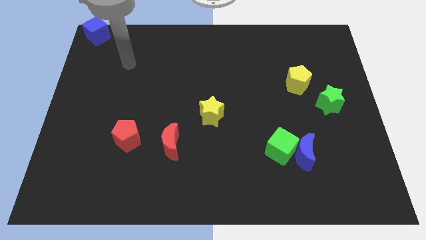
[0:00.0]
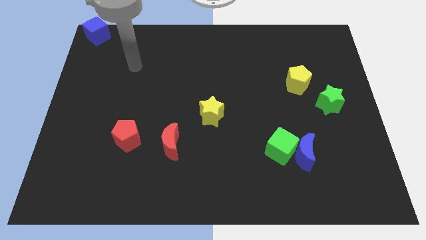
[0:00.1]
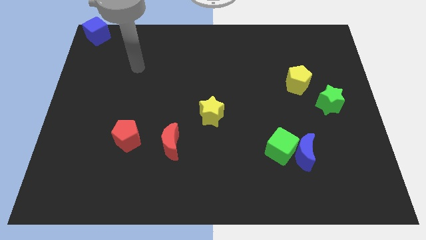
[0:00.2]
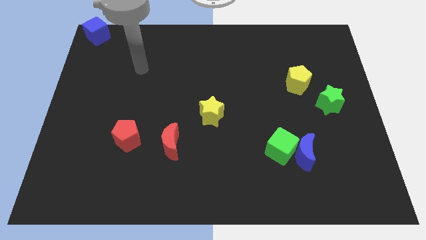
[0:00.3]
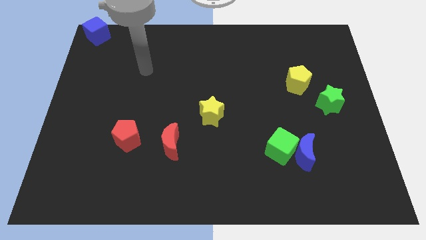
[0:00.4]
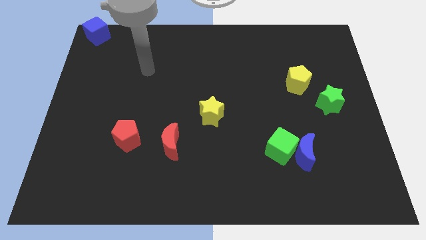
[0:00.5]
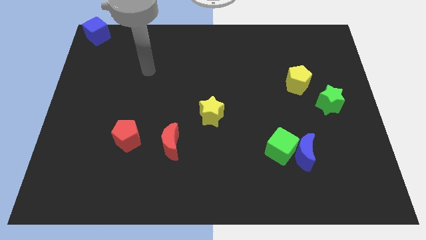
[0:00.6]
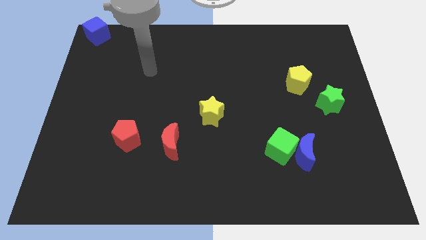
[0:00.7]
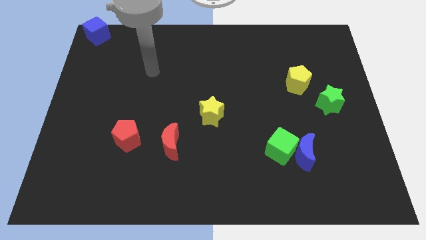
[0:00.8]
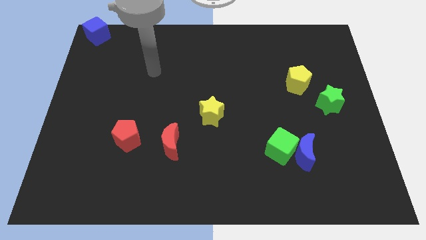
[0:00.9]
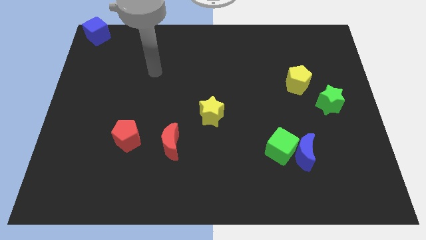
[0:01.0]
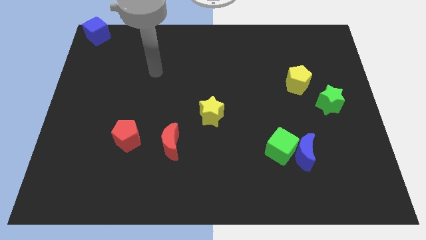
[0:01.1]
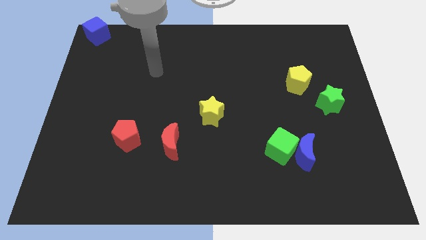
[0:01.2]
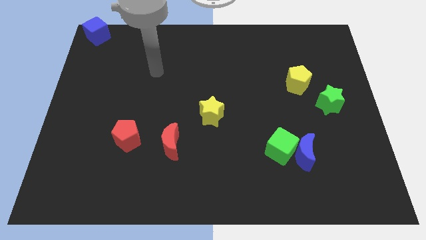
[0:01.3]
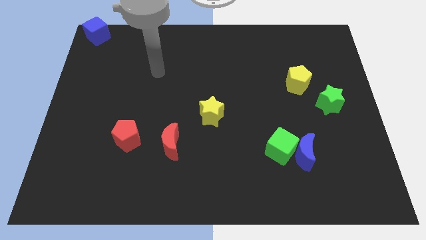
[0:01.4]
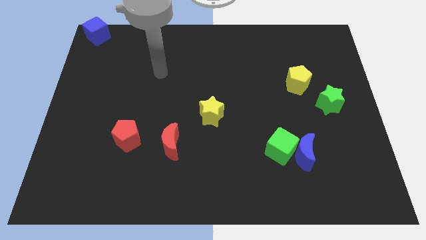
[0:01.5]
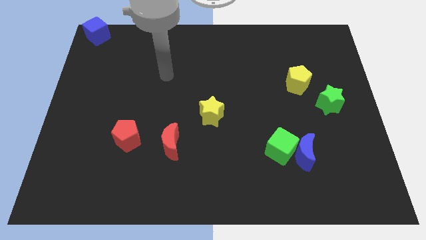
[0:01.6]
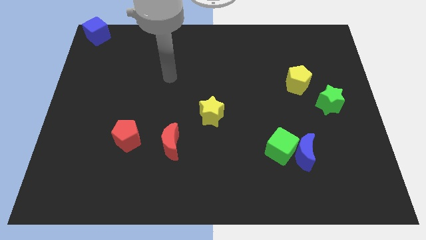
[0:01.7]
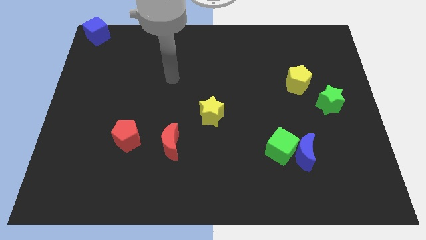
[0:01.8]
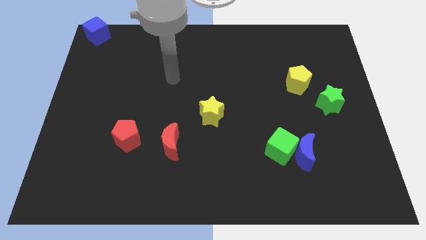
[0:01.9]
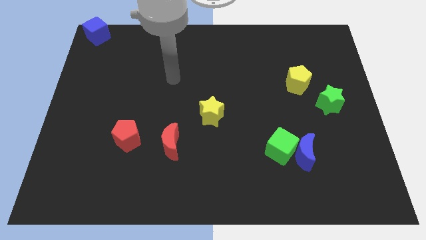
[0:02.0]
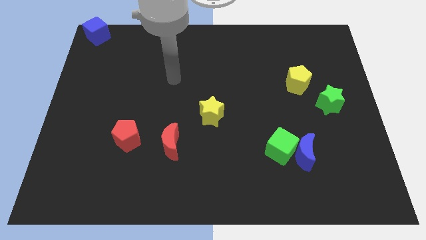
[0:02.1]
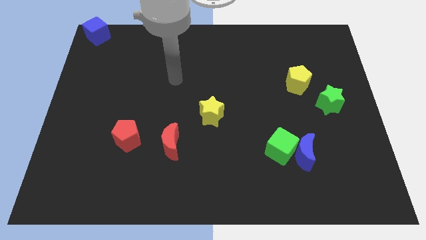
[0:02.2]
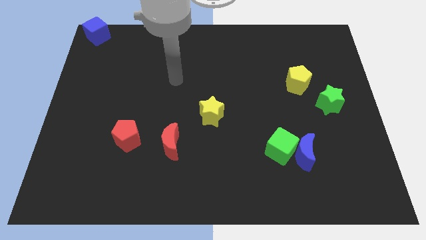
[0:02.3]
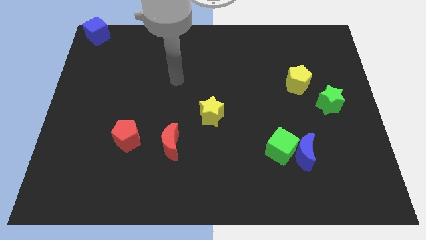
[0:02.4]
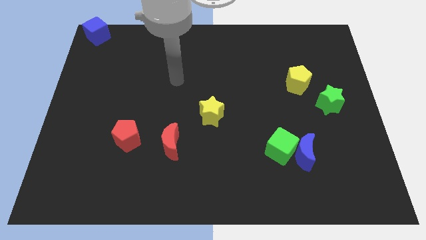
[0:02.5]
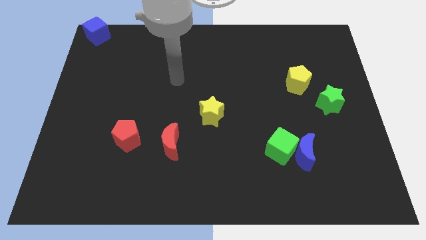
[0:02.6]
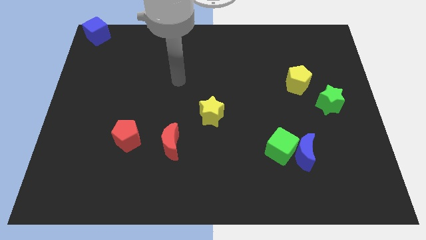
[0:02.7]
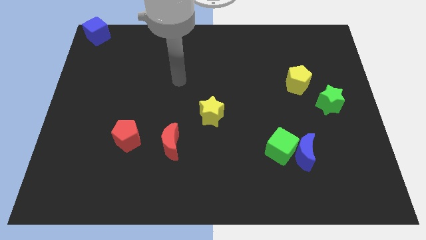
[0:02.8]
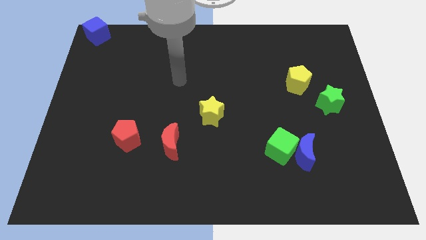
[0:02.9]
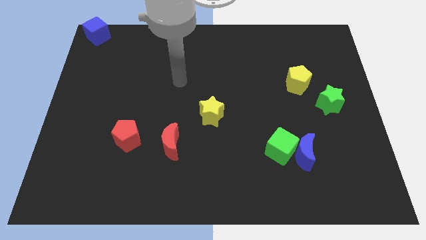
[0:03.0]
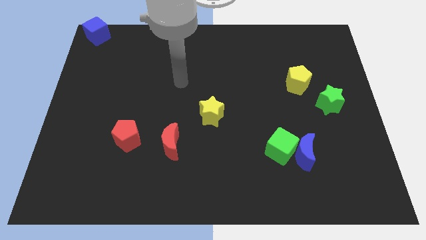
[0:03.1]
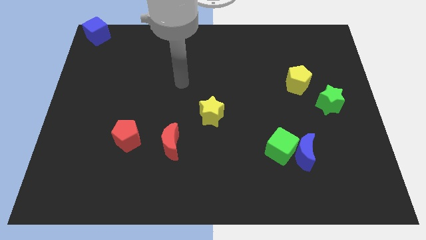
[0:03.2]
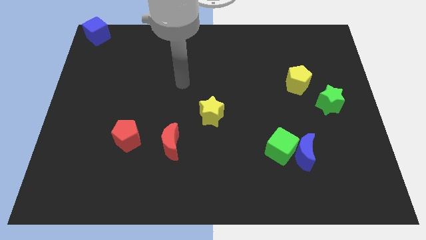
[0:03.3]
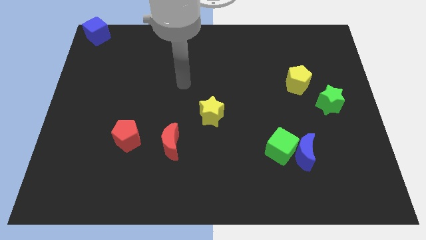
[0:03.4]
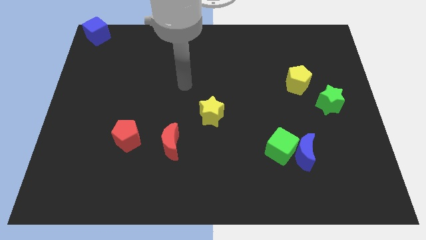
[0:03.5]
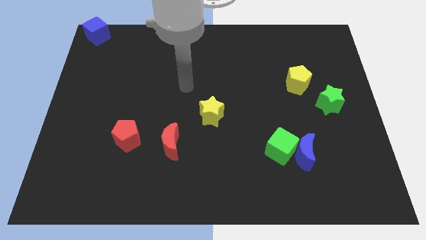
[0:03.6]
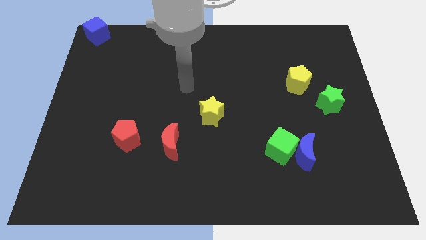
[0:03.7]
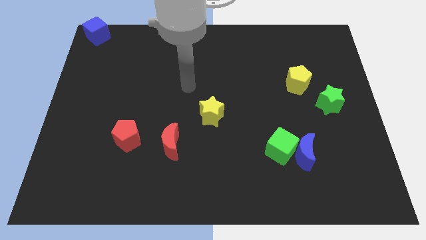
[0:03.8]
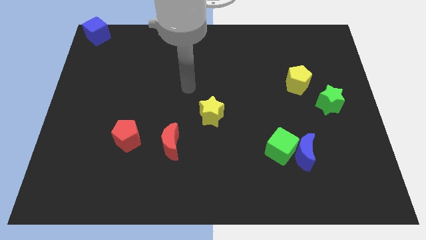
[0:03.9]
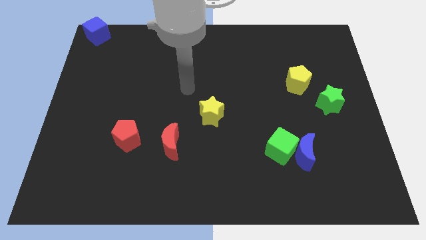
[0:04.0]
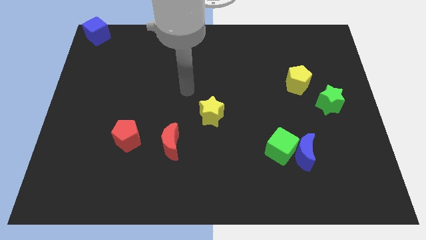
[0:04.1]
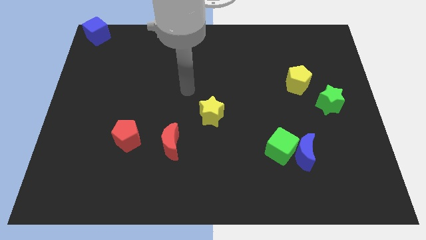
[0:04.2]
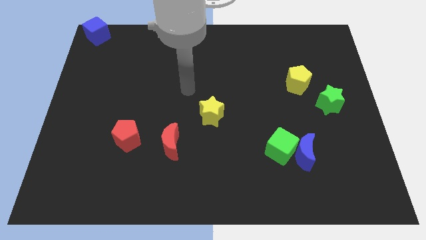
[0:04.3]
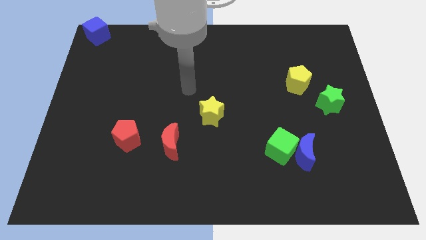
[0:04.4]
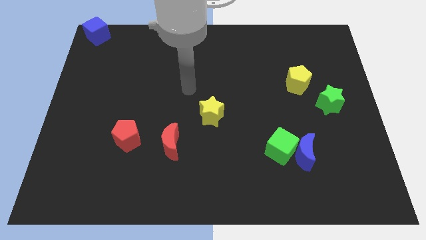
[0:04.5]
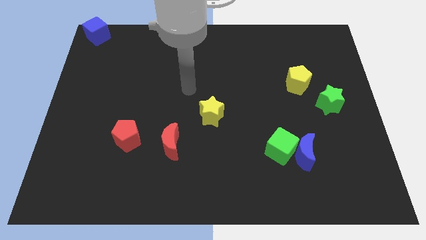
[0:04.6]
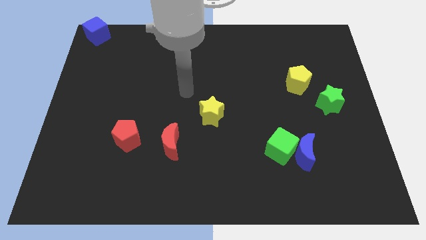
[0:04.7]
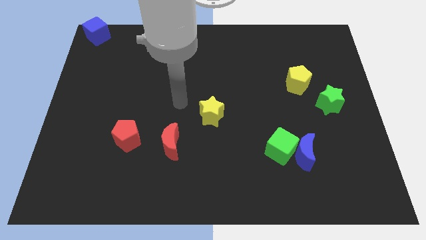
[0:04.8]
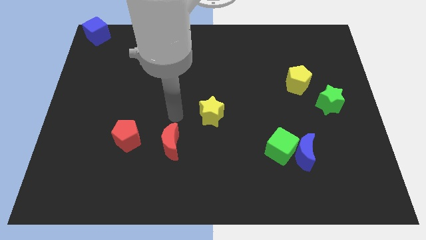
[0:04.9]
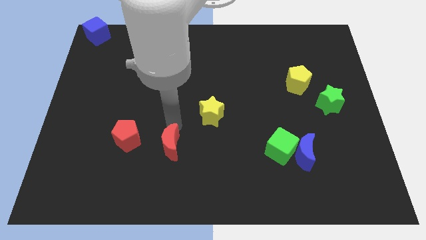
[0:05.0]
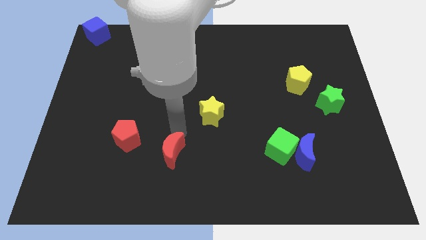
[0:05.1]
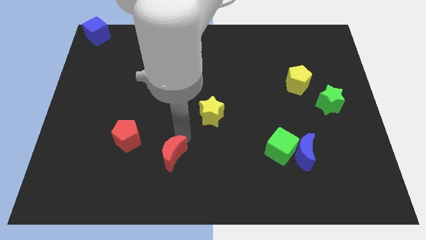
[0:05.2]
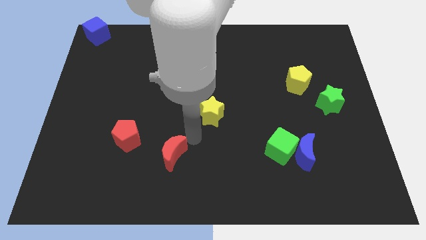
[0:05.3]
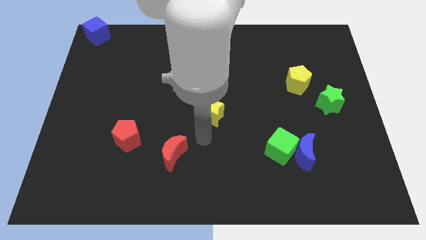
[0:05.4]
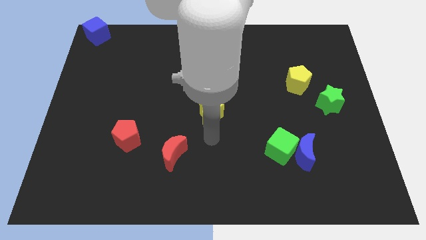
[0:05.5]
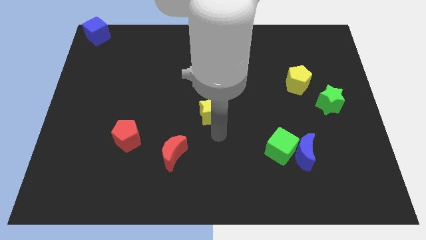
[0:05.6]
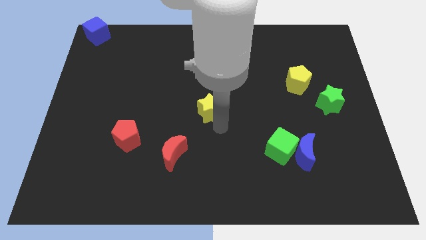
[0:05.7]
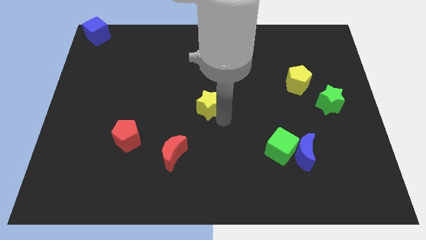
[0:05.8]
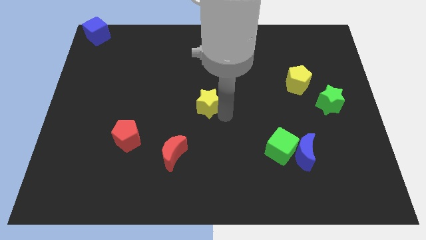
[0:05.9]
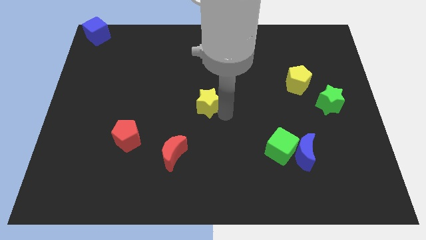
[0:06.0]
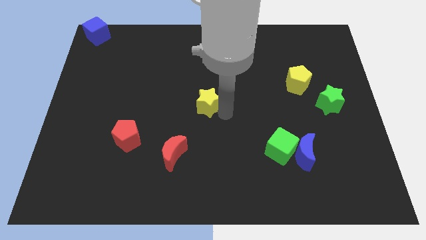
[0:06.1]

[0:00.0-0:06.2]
push the yellow star to the center of the board

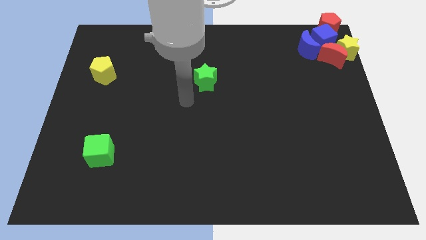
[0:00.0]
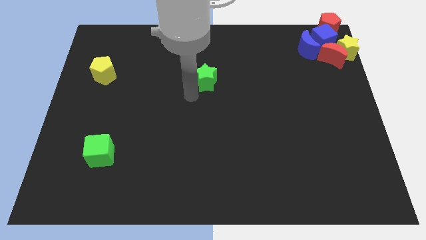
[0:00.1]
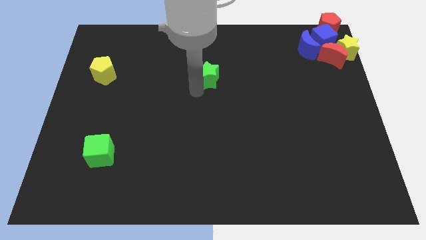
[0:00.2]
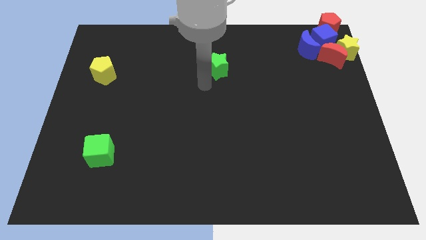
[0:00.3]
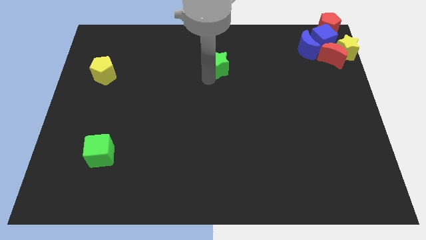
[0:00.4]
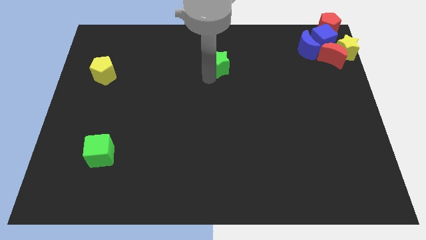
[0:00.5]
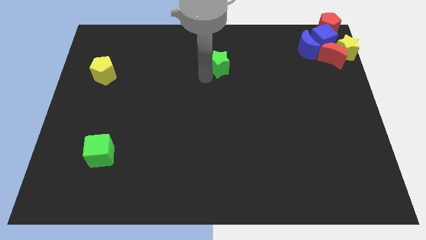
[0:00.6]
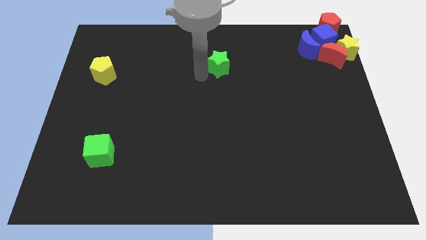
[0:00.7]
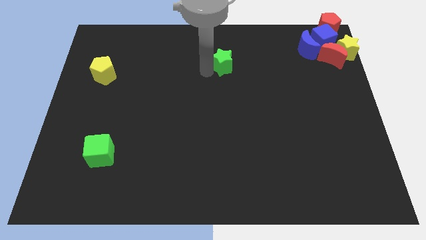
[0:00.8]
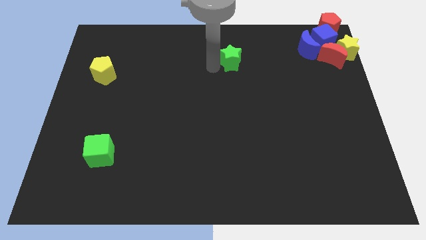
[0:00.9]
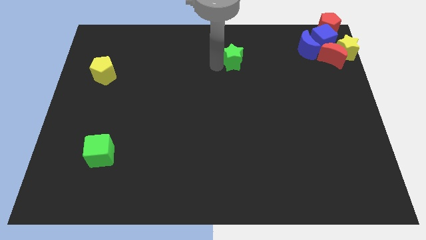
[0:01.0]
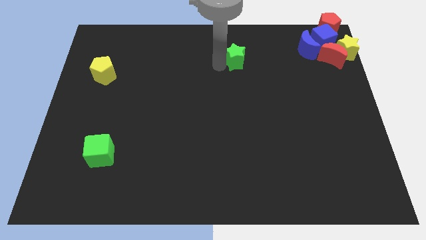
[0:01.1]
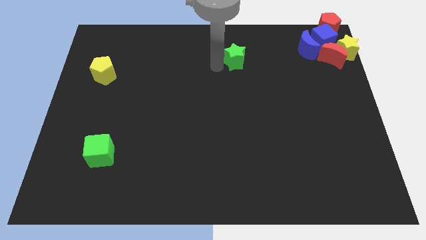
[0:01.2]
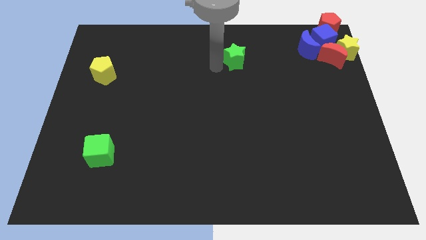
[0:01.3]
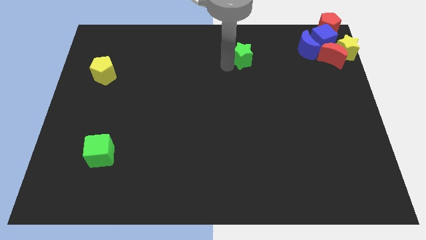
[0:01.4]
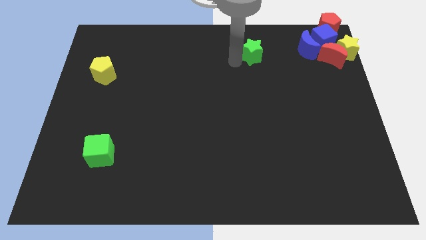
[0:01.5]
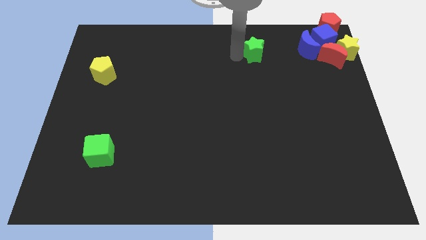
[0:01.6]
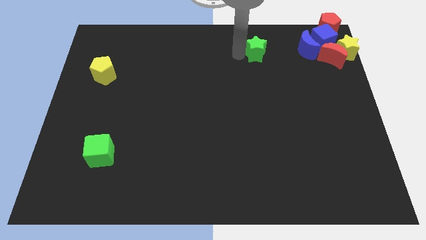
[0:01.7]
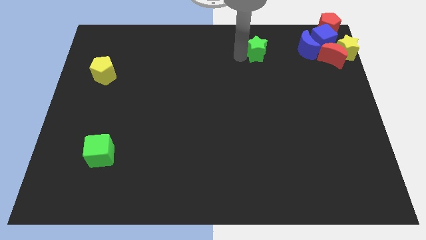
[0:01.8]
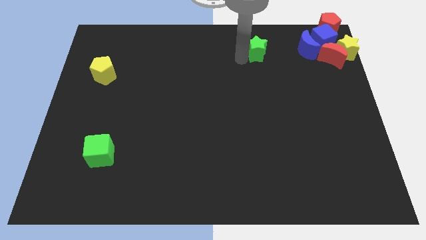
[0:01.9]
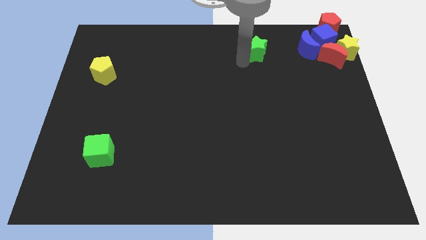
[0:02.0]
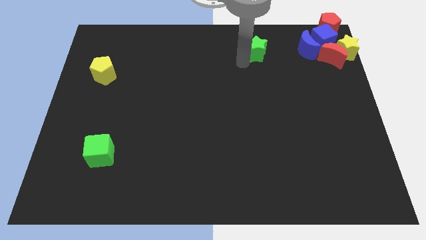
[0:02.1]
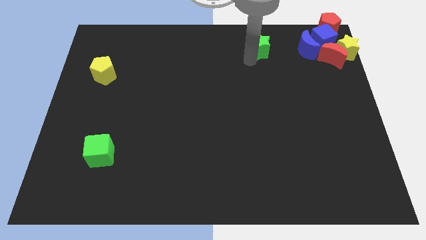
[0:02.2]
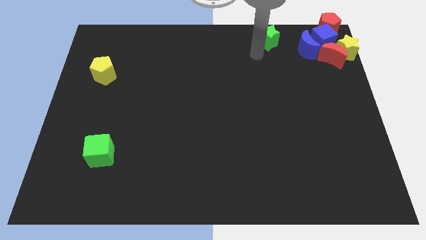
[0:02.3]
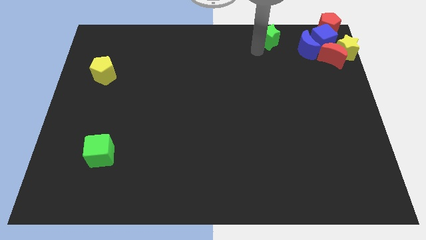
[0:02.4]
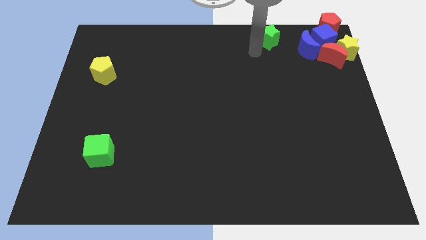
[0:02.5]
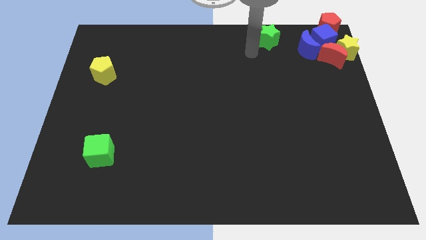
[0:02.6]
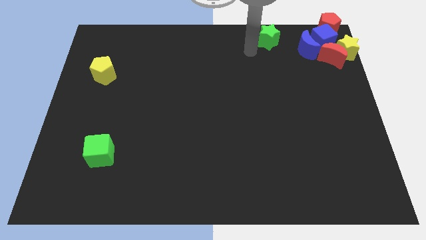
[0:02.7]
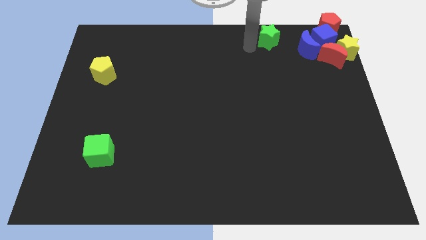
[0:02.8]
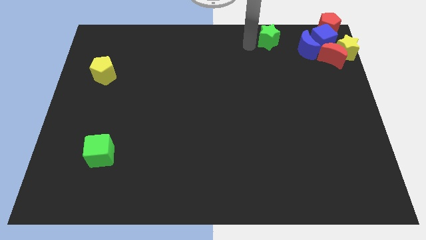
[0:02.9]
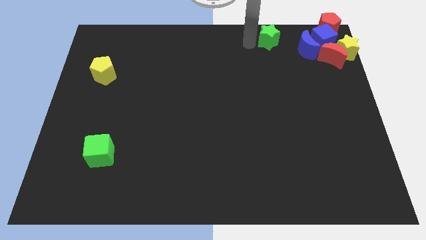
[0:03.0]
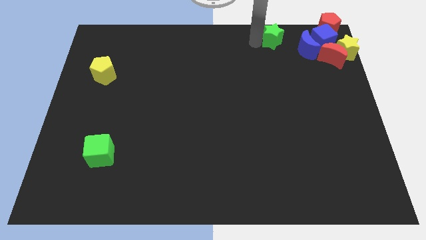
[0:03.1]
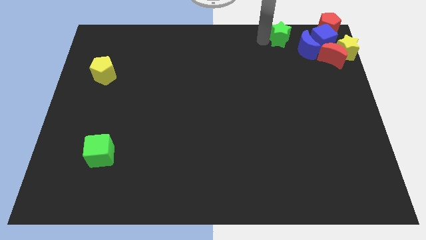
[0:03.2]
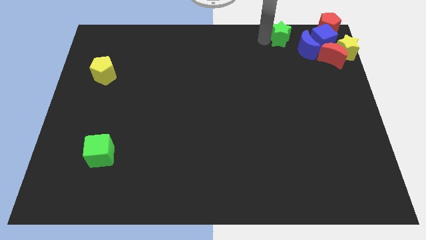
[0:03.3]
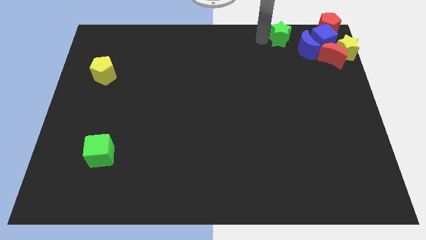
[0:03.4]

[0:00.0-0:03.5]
slide the green star towards the top right corner
